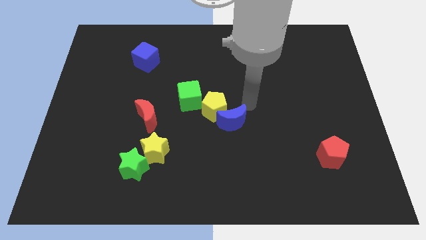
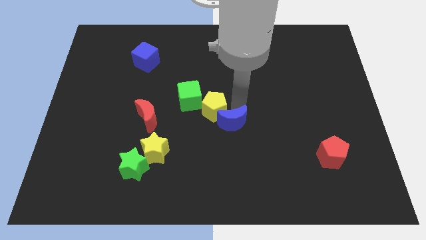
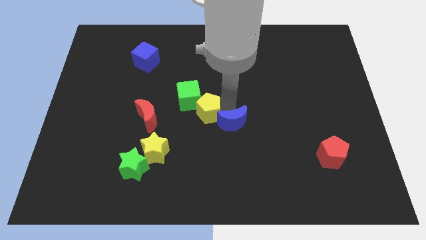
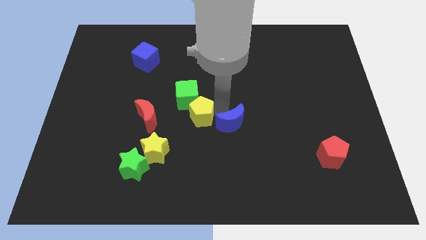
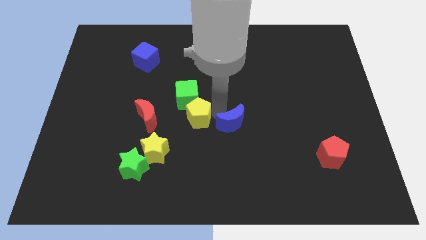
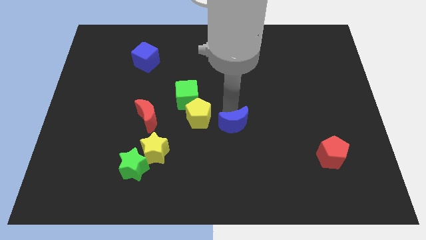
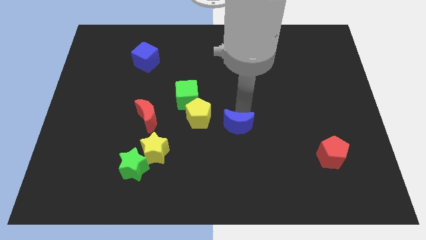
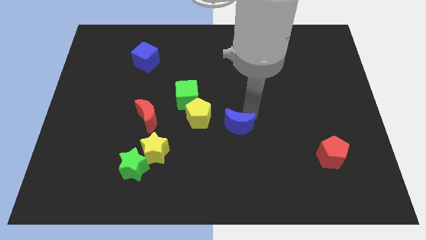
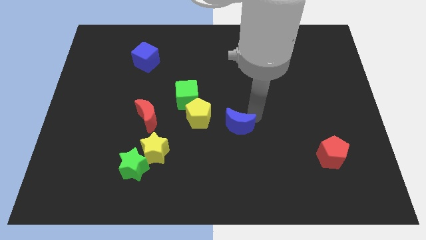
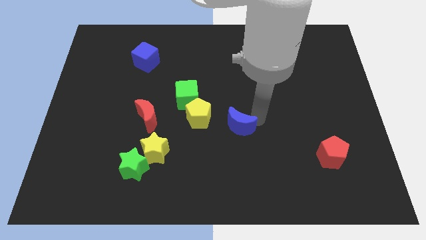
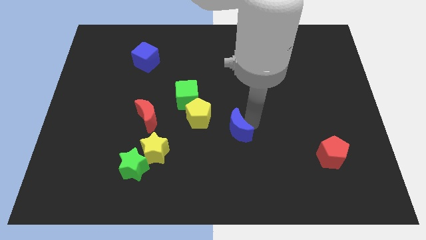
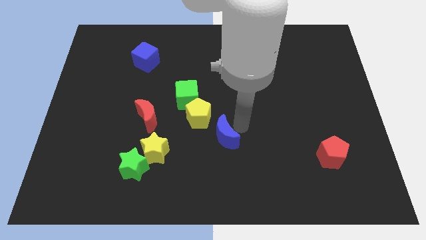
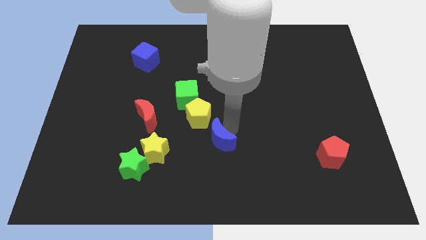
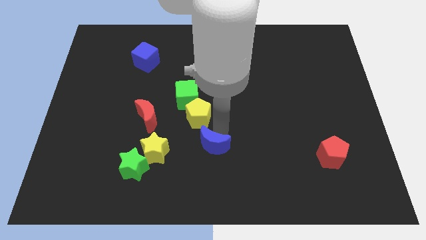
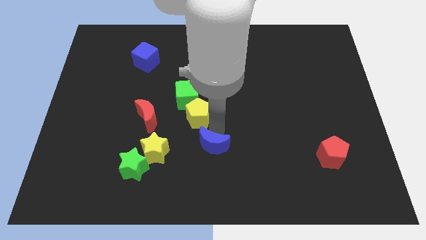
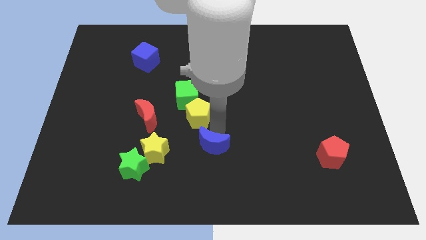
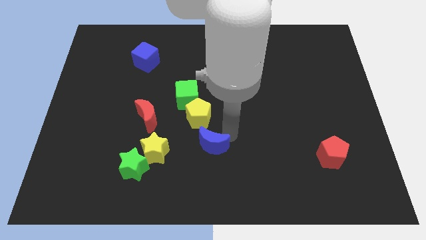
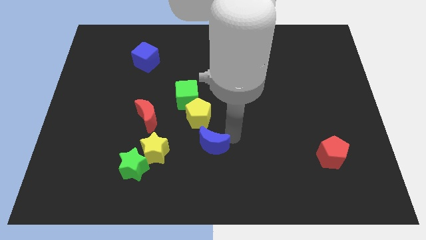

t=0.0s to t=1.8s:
move the blue crescent to the down

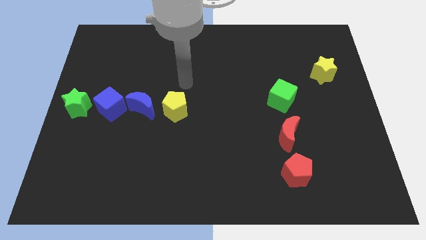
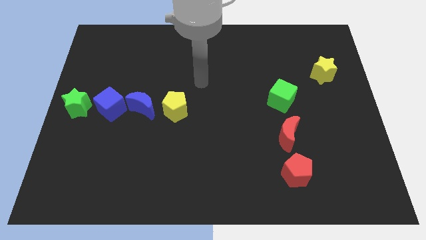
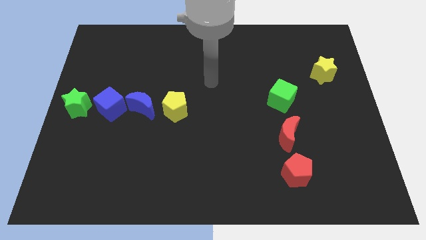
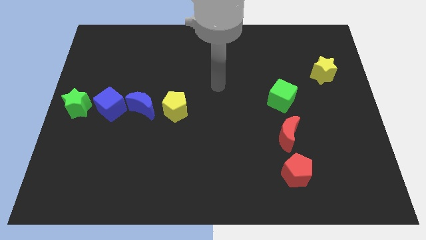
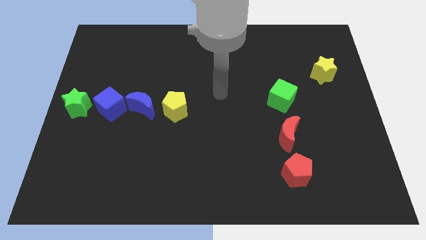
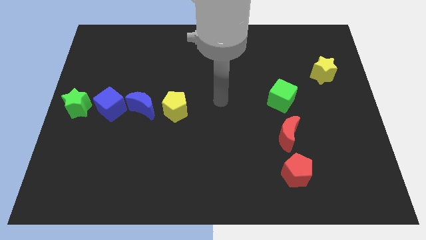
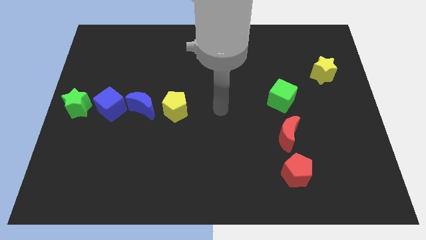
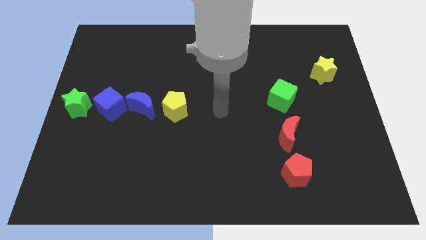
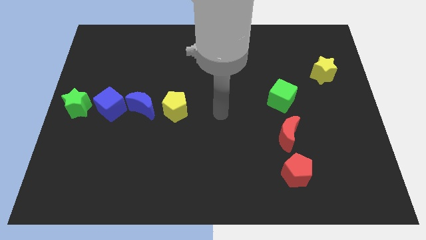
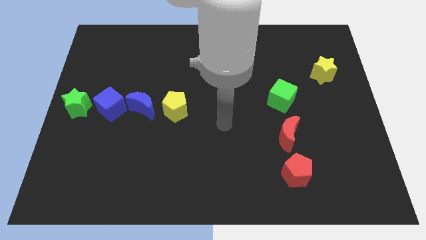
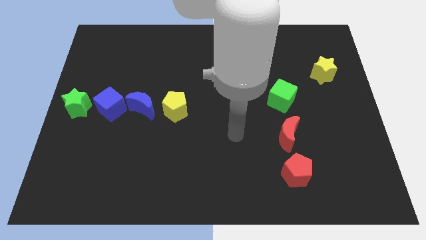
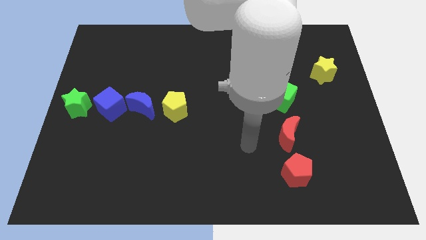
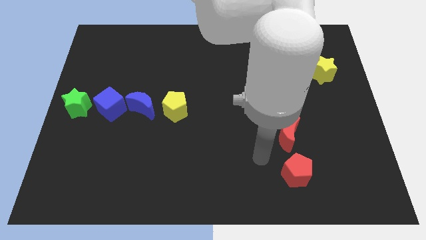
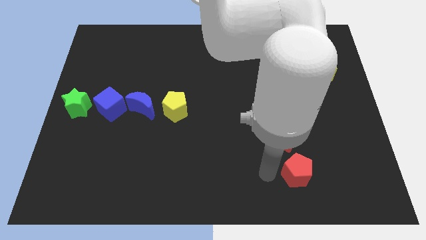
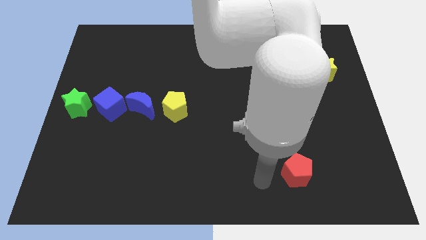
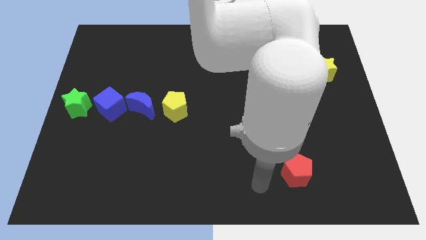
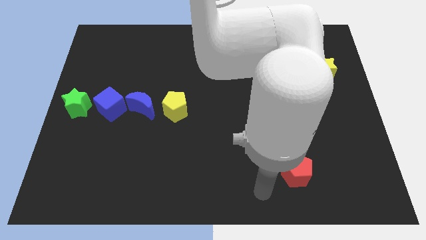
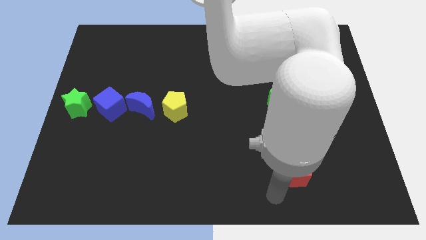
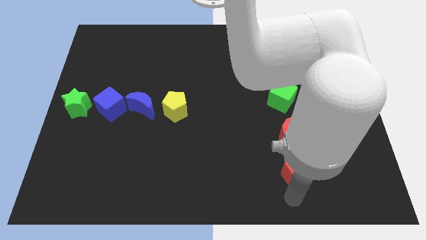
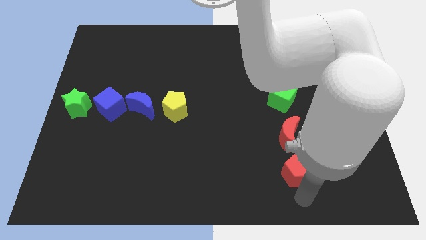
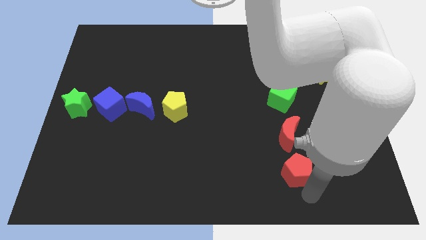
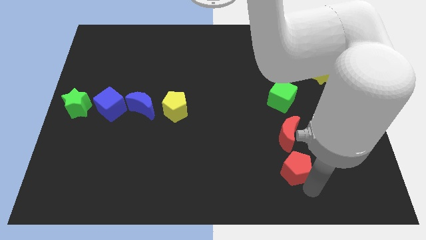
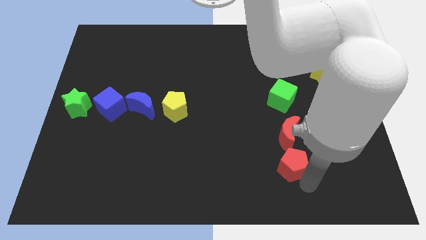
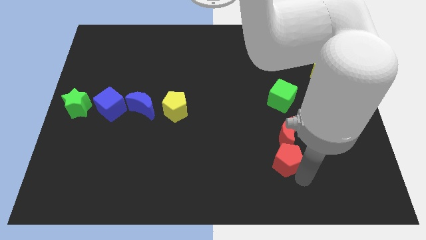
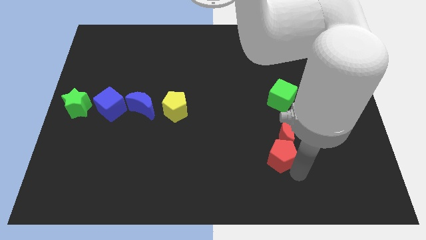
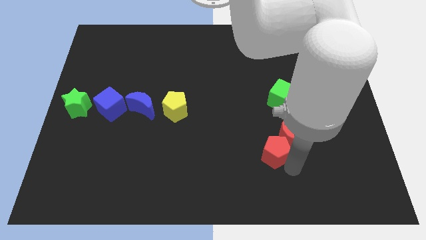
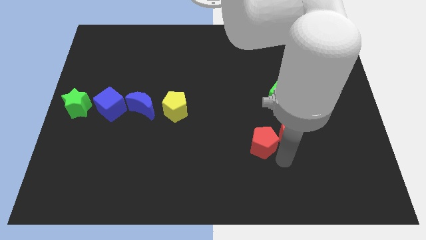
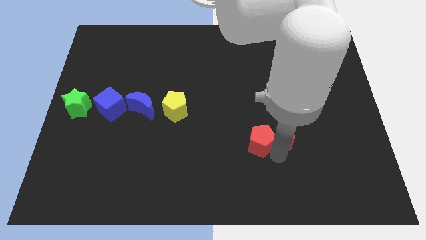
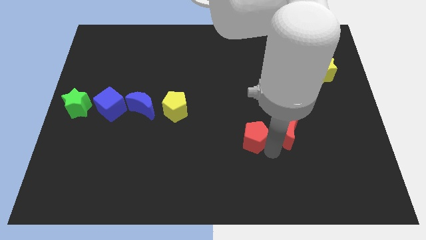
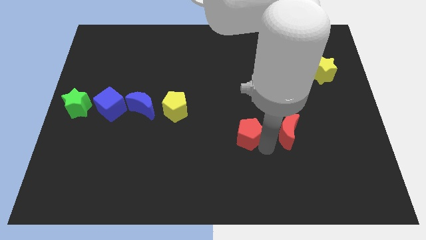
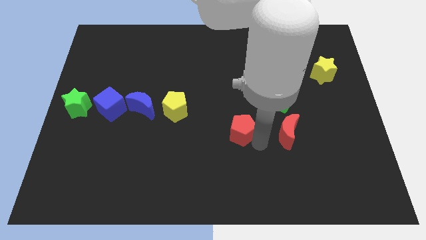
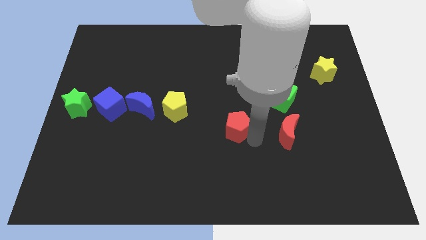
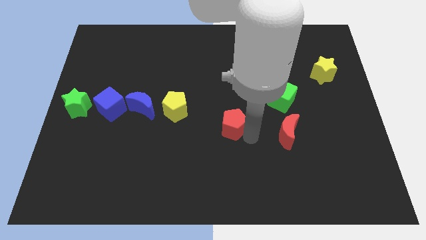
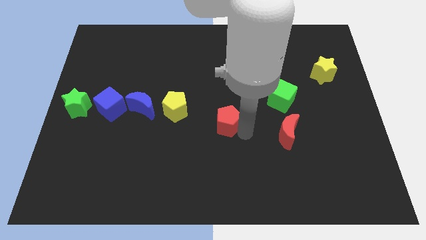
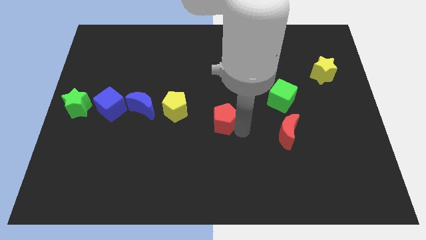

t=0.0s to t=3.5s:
place the red pentagon in between the red moon and yellow pentagon

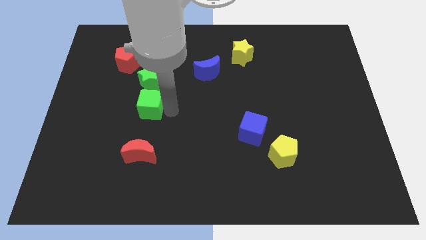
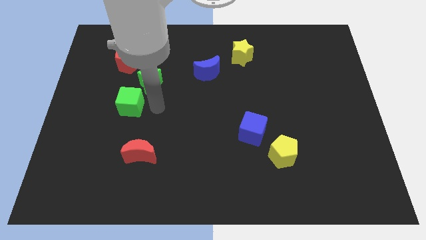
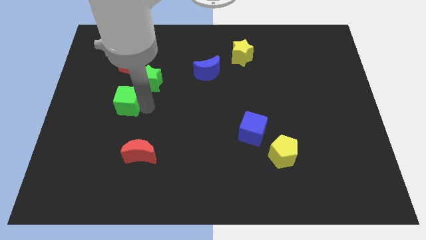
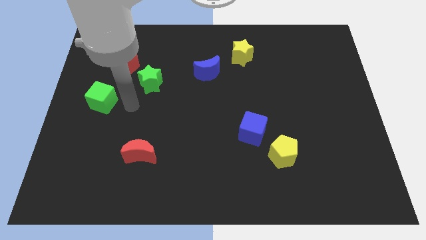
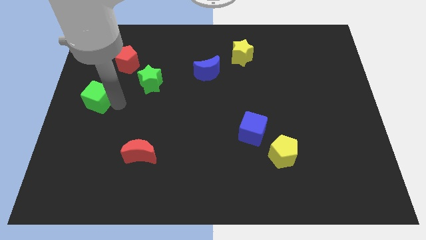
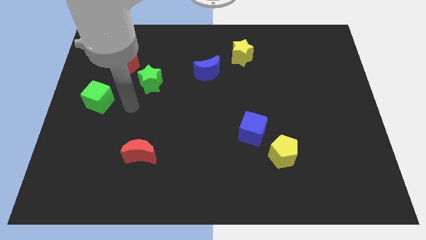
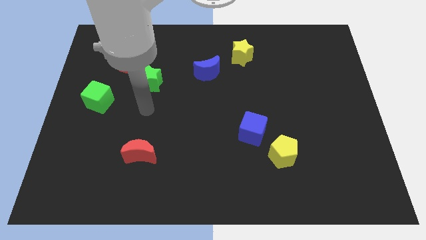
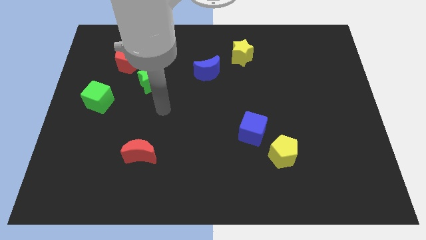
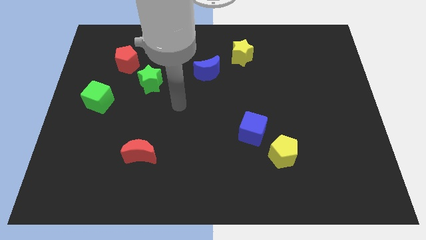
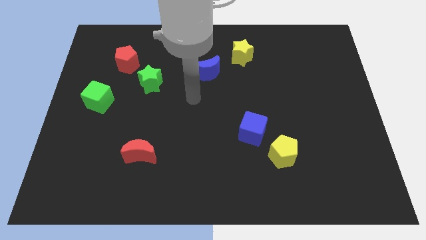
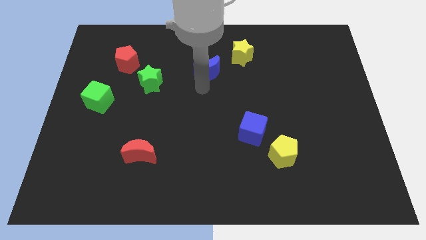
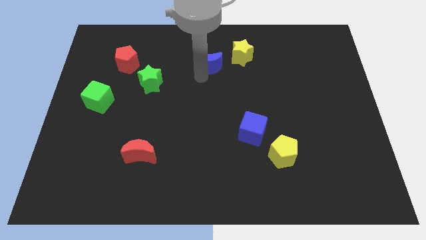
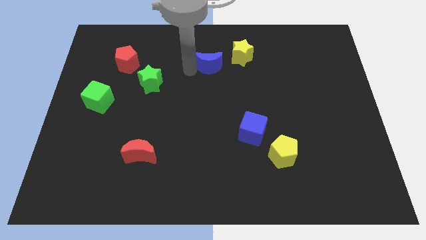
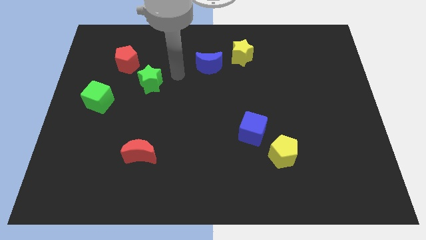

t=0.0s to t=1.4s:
slightly push the green cube to the left

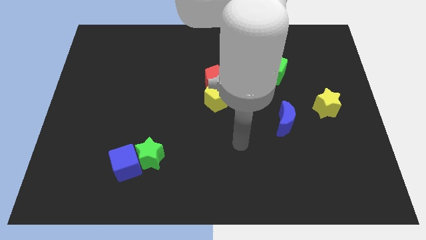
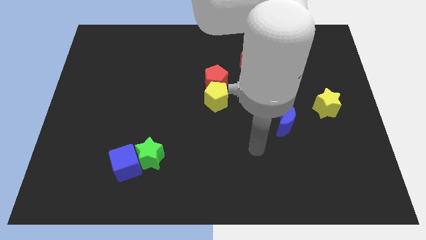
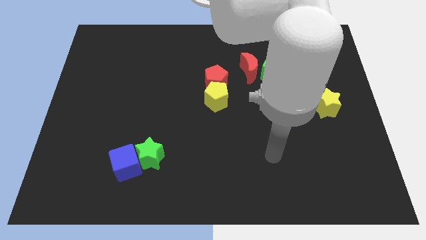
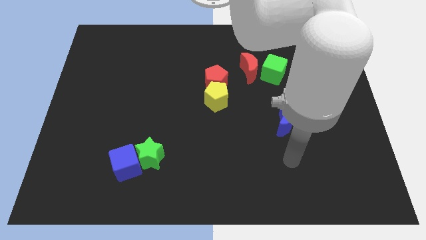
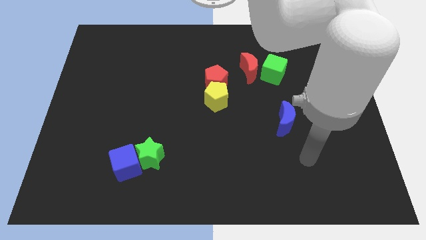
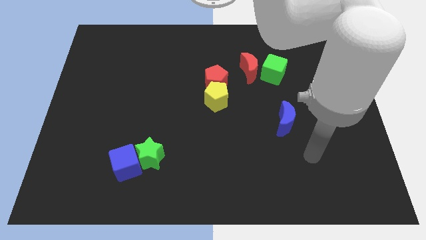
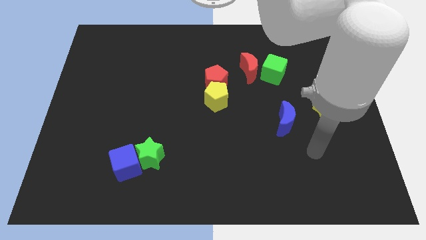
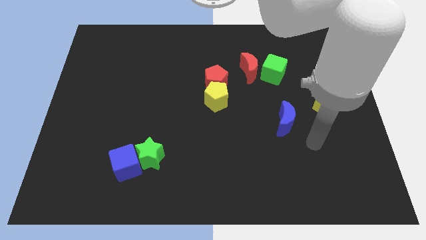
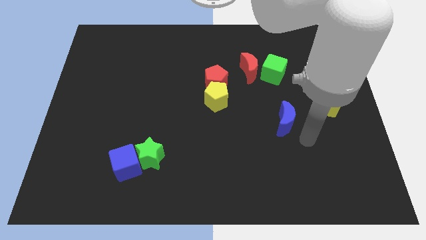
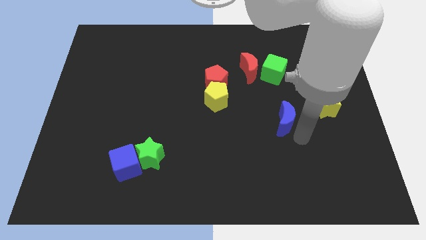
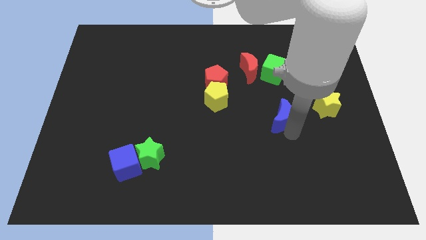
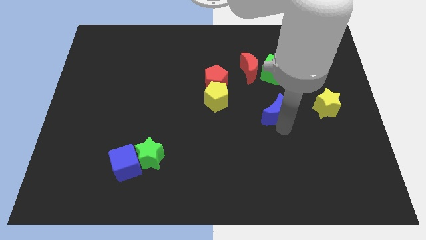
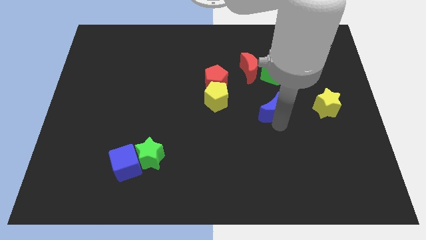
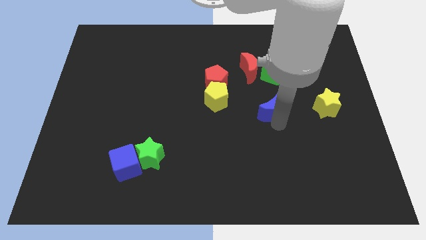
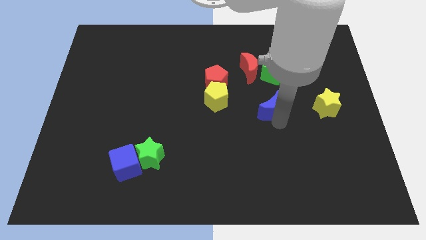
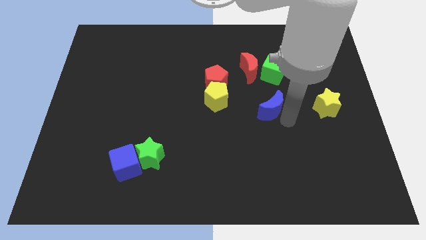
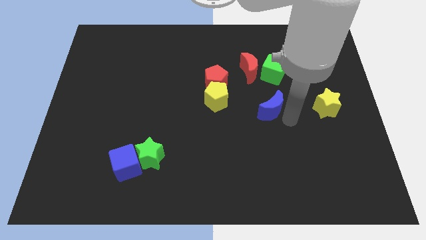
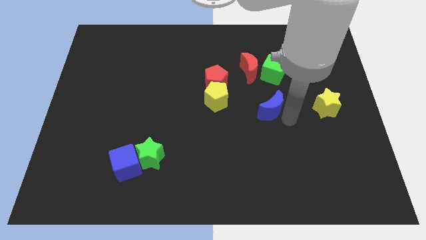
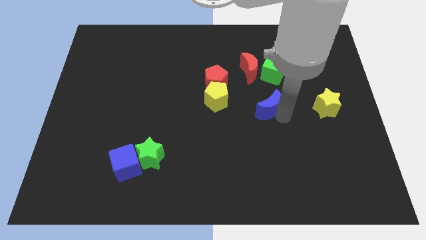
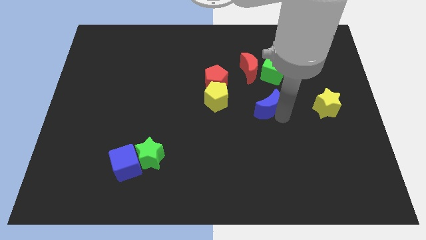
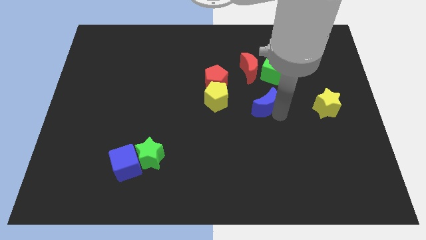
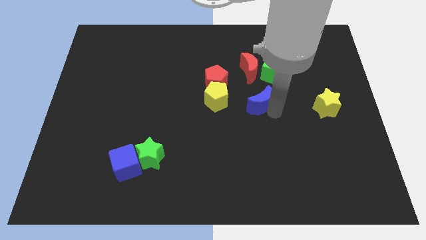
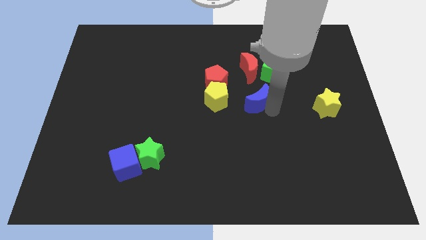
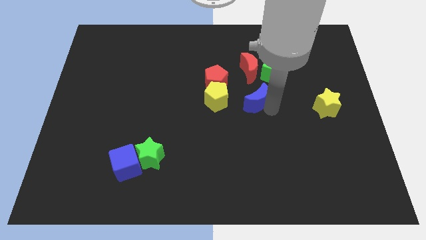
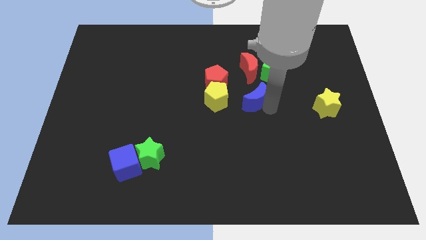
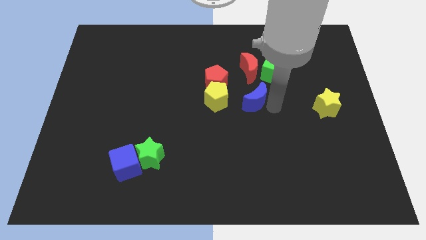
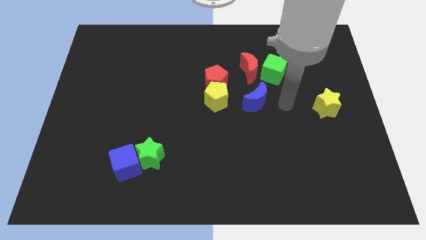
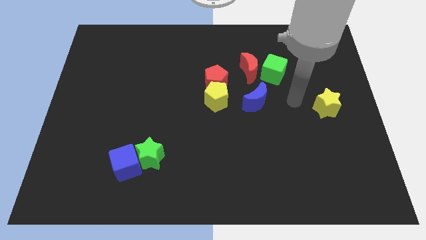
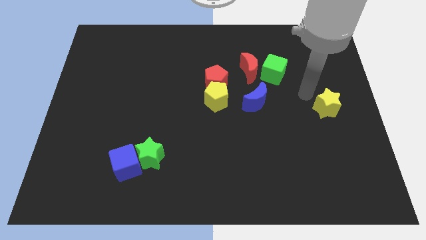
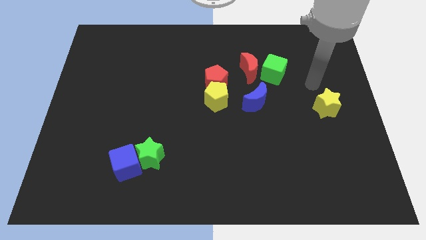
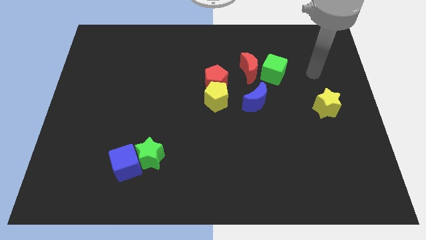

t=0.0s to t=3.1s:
push the blue moon towards the yellow pentagon
